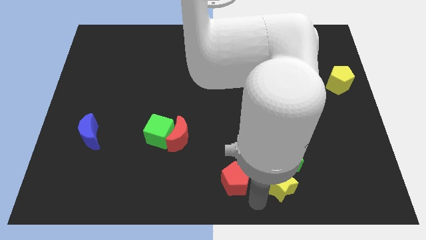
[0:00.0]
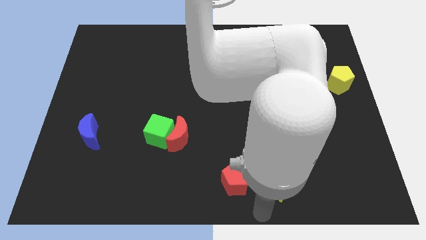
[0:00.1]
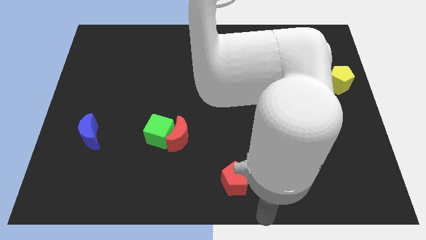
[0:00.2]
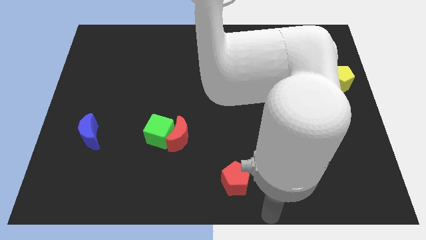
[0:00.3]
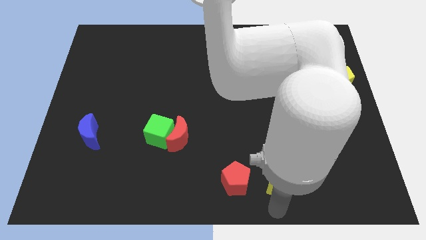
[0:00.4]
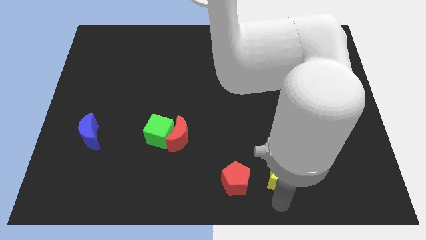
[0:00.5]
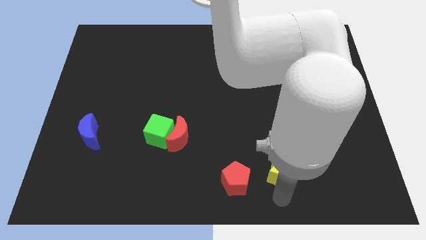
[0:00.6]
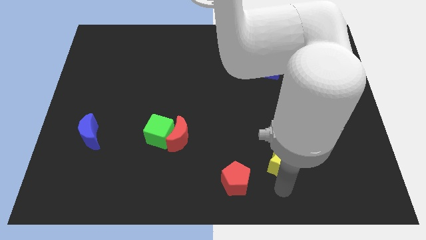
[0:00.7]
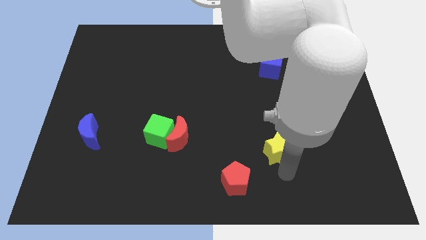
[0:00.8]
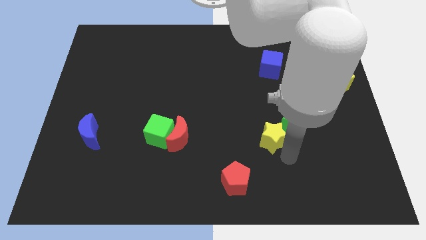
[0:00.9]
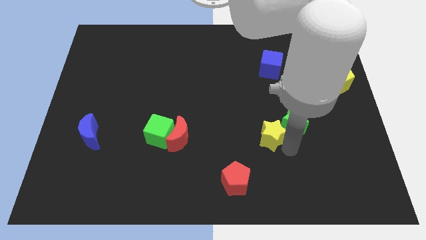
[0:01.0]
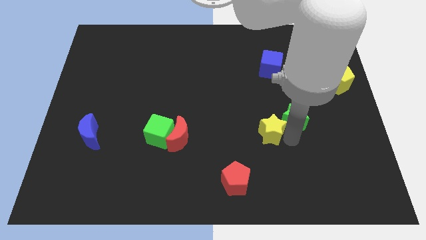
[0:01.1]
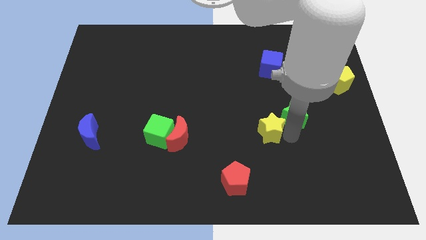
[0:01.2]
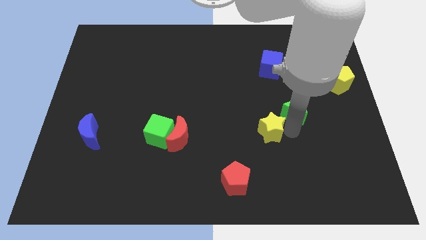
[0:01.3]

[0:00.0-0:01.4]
push both the stars to the top side of the board

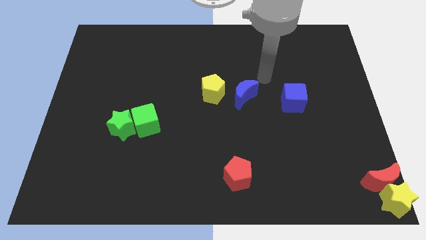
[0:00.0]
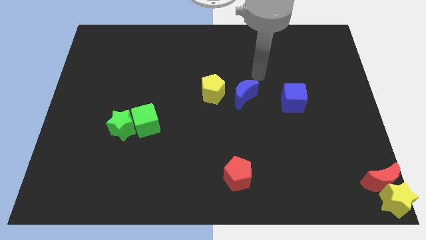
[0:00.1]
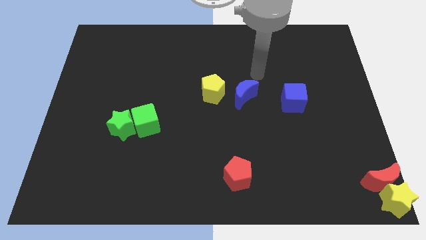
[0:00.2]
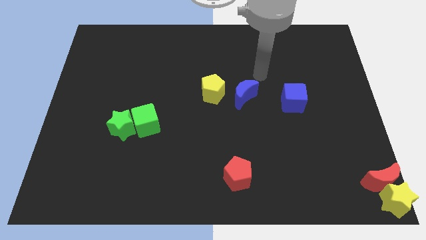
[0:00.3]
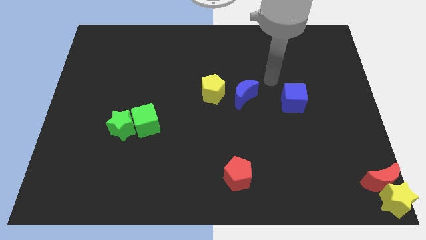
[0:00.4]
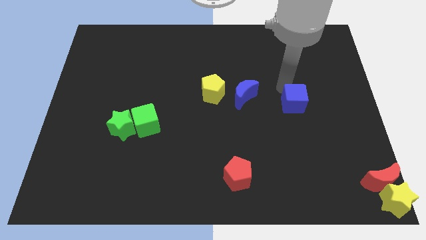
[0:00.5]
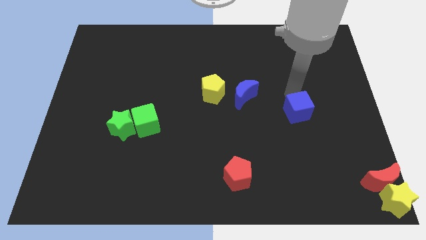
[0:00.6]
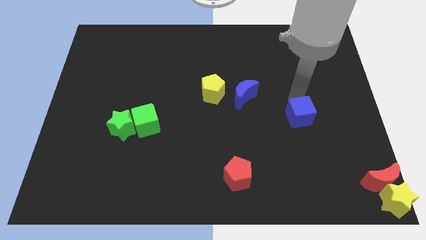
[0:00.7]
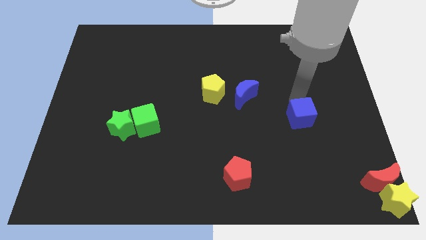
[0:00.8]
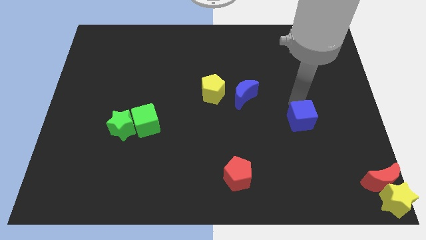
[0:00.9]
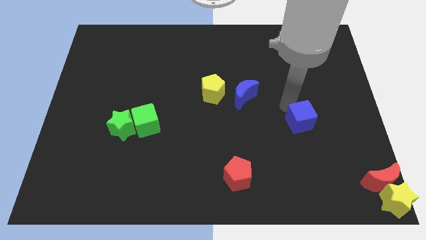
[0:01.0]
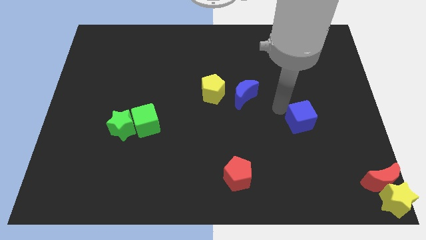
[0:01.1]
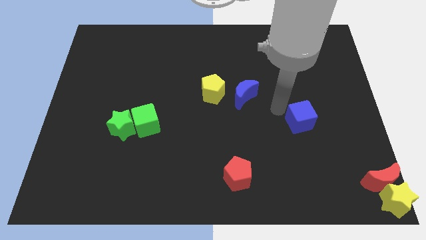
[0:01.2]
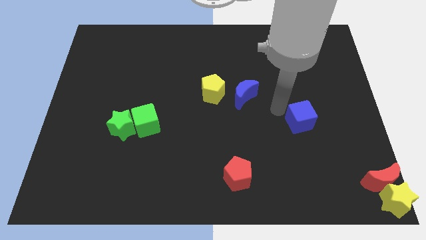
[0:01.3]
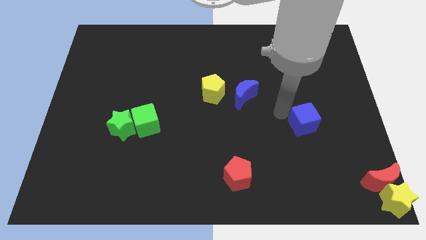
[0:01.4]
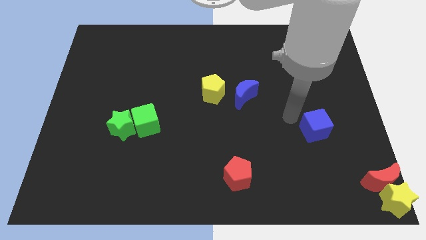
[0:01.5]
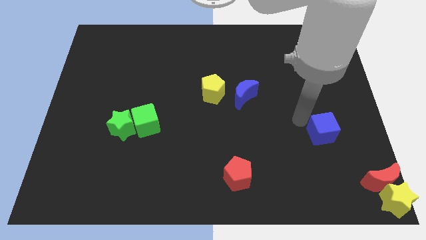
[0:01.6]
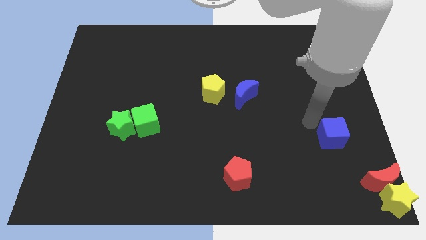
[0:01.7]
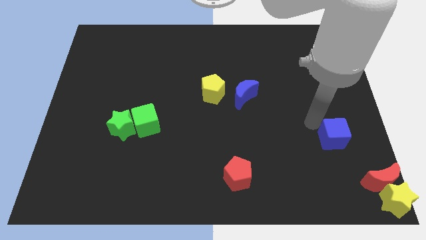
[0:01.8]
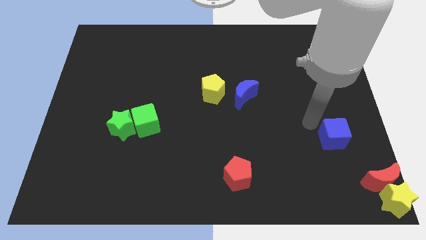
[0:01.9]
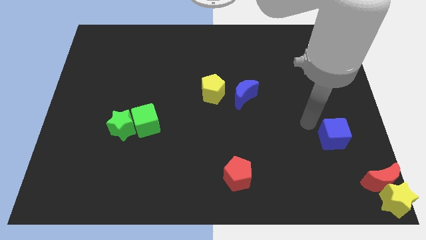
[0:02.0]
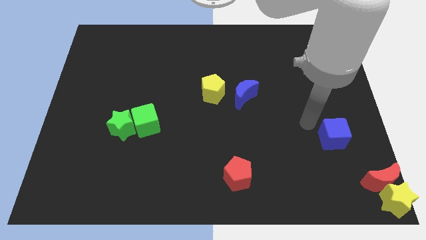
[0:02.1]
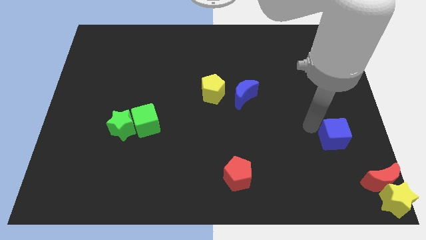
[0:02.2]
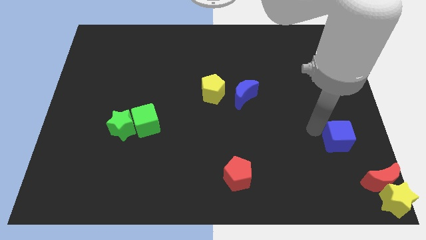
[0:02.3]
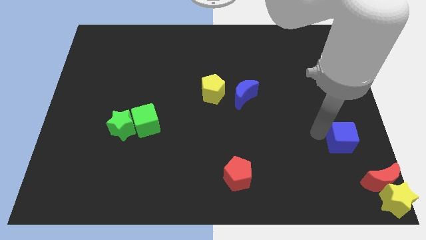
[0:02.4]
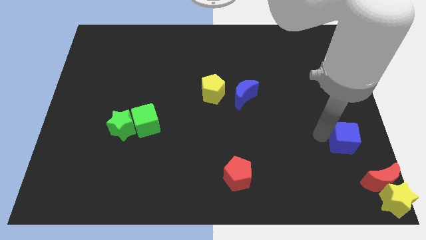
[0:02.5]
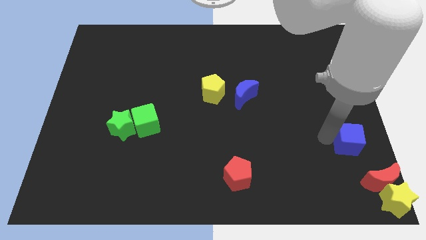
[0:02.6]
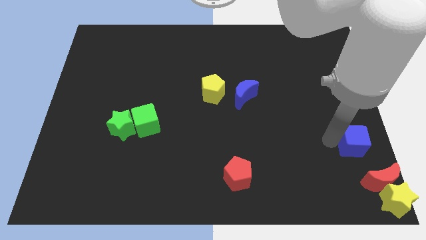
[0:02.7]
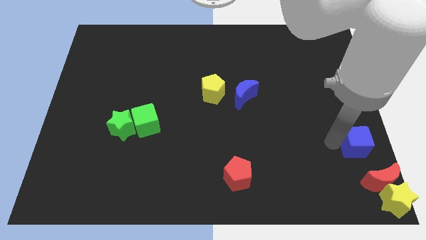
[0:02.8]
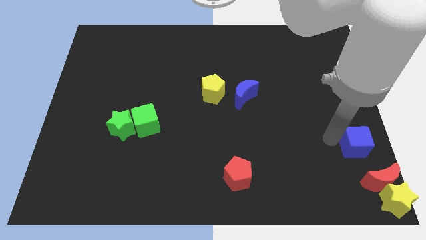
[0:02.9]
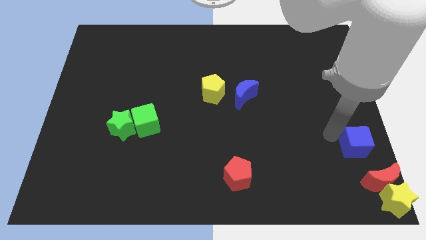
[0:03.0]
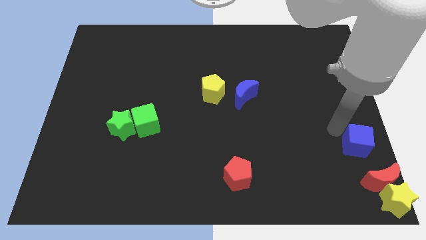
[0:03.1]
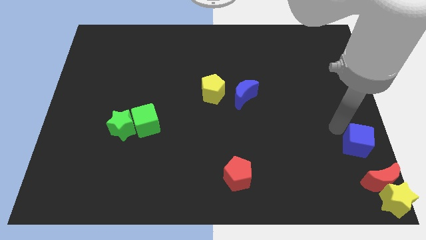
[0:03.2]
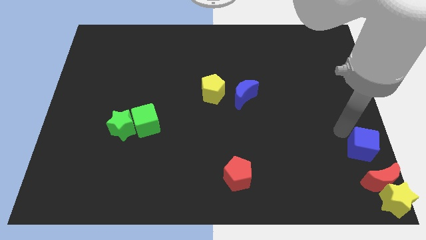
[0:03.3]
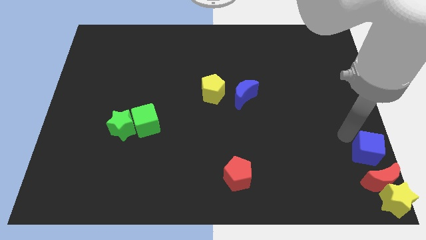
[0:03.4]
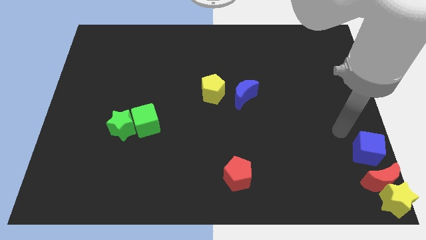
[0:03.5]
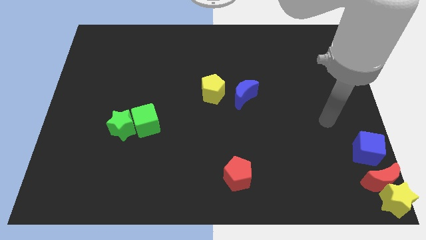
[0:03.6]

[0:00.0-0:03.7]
place the blue cube to the top of red moon

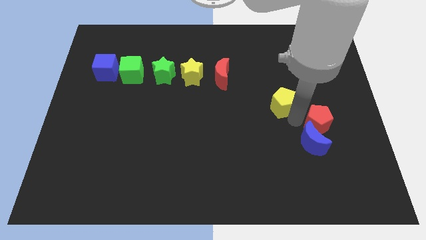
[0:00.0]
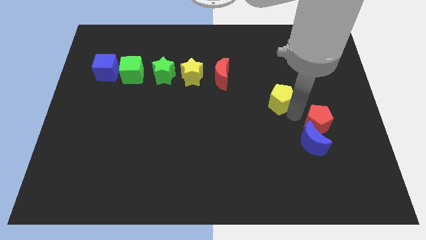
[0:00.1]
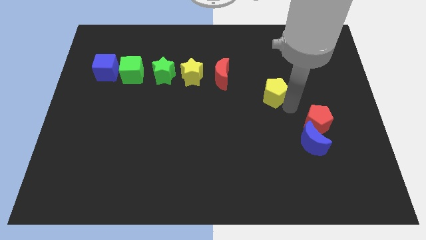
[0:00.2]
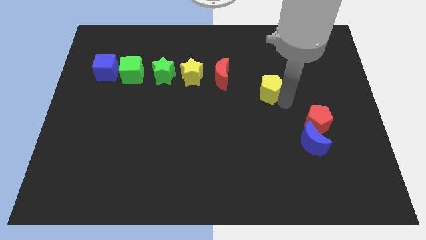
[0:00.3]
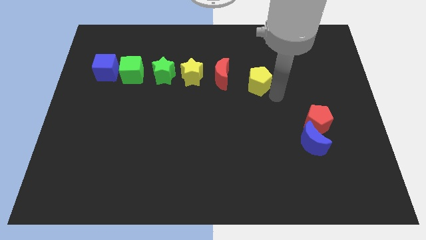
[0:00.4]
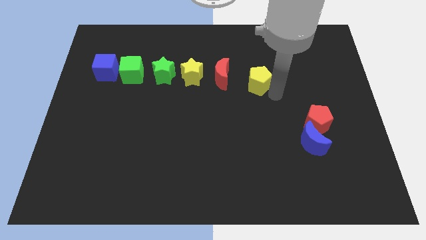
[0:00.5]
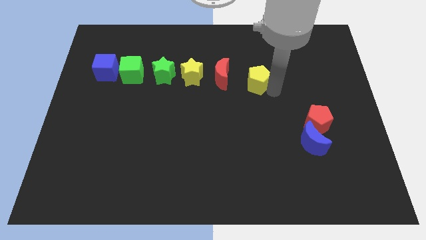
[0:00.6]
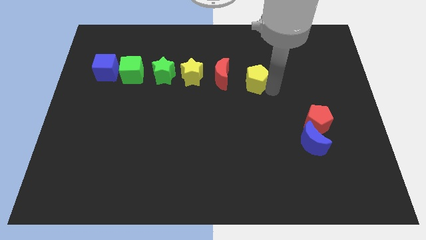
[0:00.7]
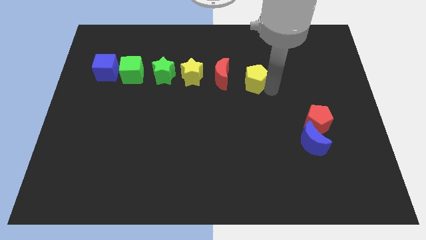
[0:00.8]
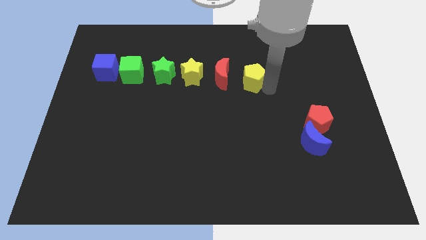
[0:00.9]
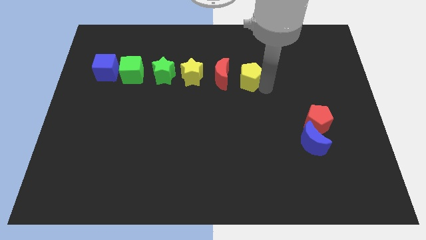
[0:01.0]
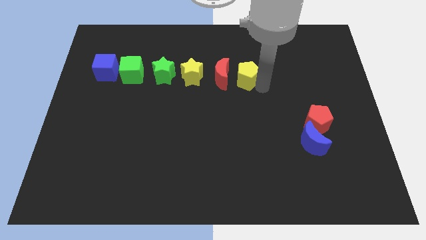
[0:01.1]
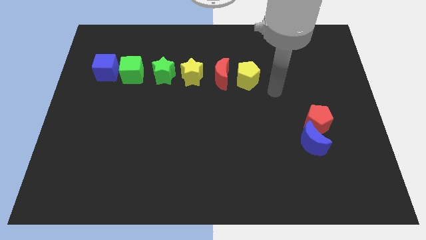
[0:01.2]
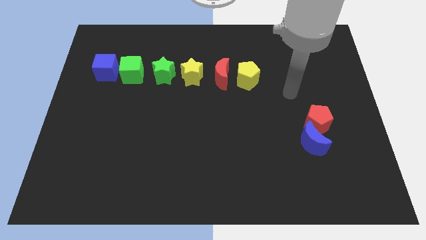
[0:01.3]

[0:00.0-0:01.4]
place the yellow pentagon to the right side of the red moon

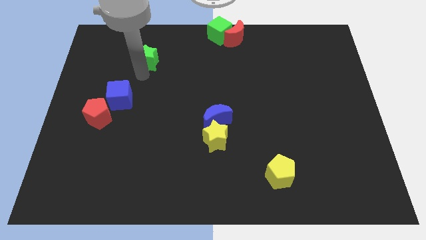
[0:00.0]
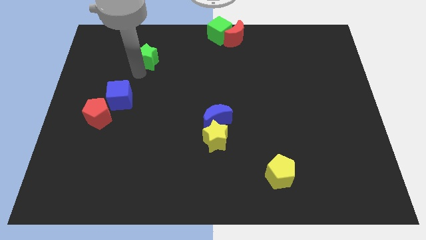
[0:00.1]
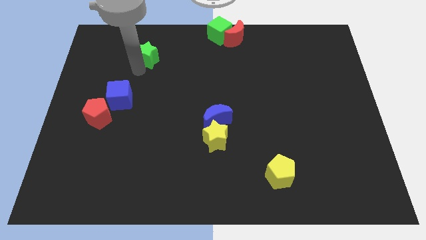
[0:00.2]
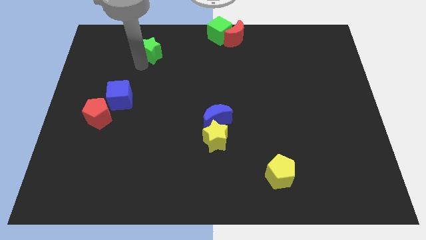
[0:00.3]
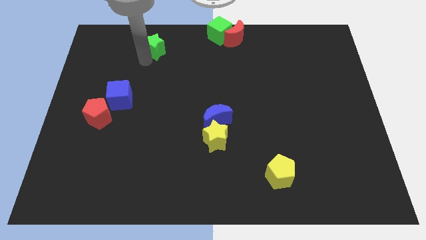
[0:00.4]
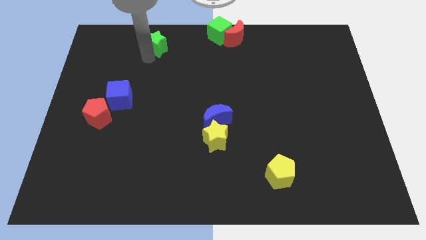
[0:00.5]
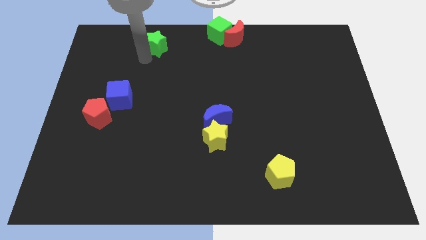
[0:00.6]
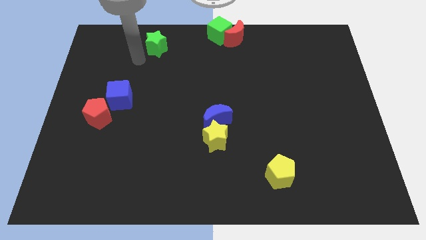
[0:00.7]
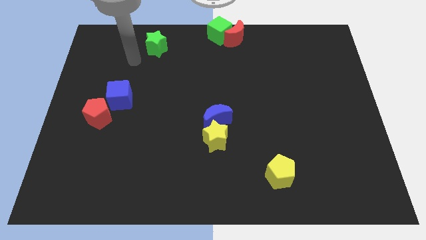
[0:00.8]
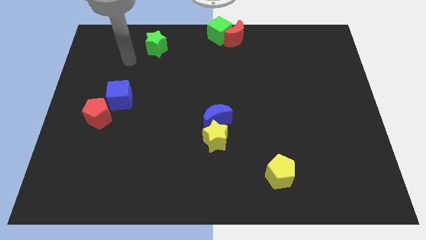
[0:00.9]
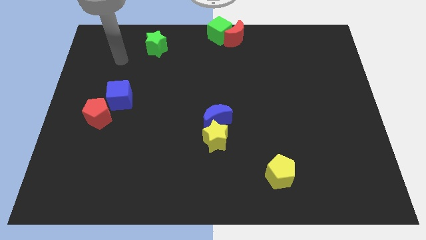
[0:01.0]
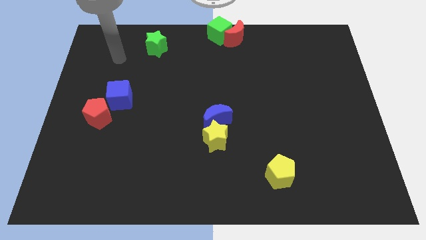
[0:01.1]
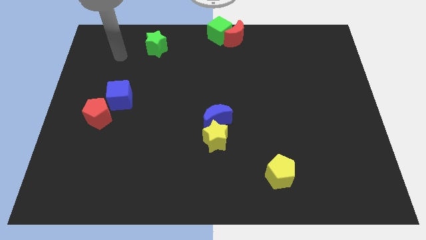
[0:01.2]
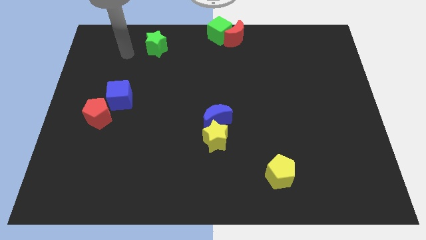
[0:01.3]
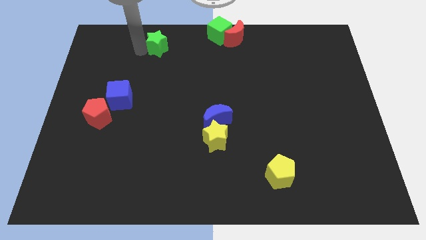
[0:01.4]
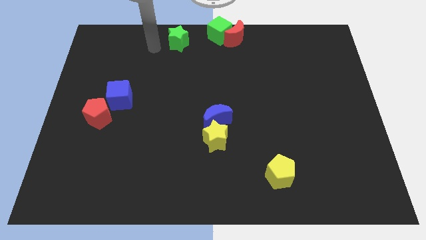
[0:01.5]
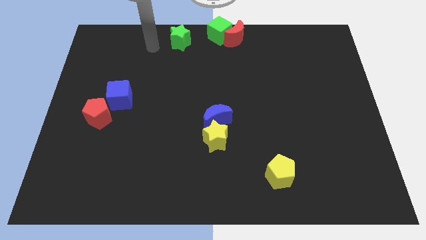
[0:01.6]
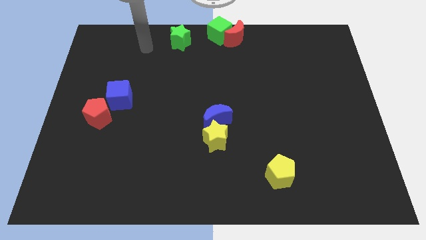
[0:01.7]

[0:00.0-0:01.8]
move the green star diagonally bottom left to the green cube

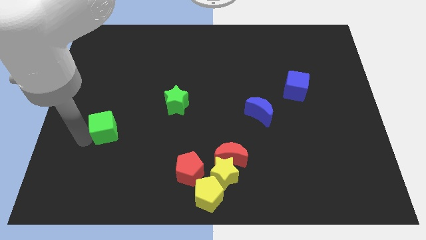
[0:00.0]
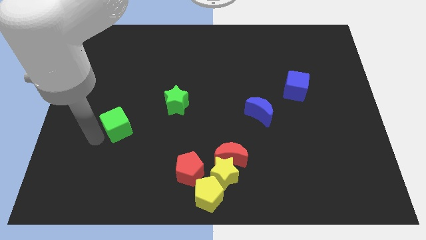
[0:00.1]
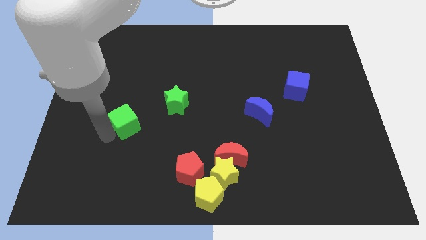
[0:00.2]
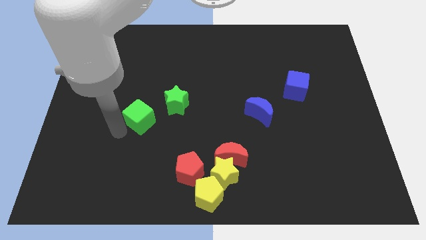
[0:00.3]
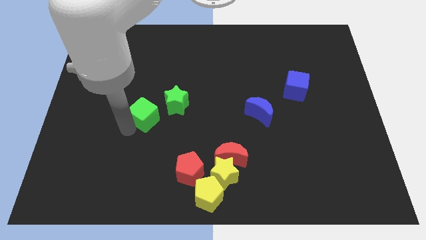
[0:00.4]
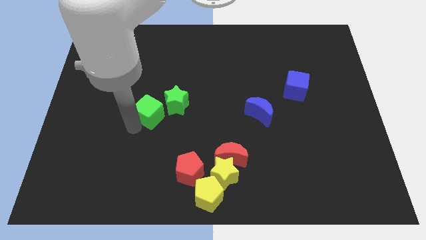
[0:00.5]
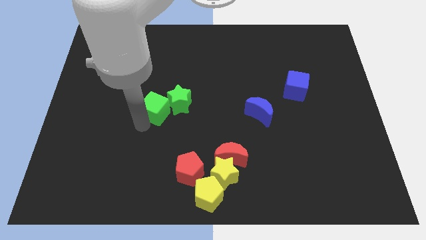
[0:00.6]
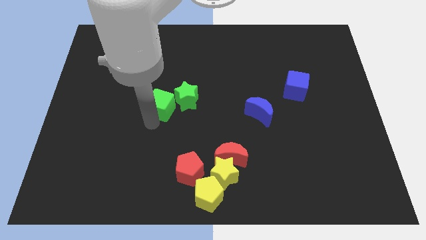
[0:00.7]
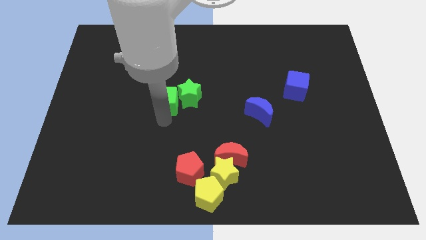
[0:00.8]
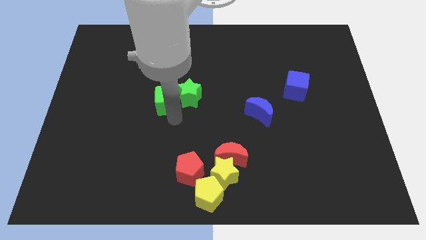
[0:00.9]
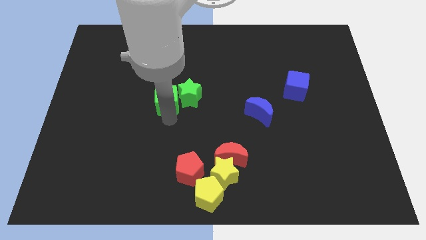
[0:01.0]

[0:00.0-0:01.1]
move the green cube into the green star
